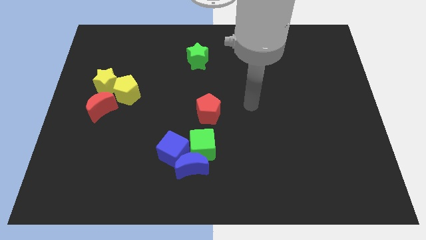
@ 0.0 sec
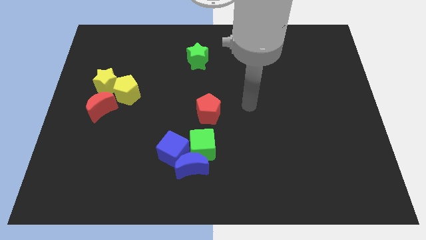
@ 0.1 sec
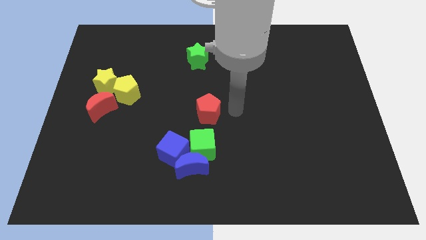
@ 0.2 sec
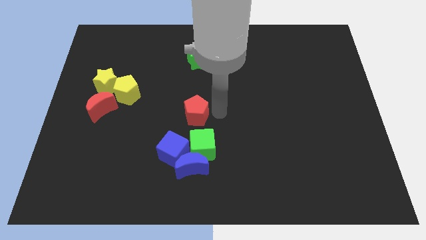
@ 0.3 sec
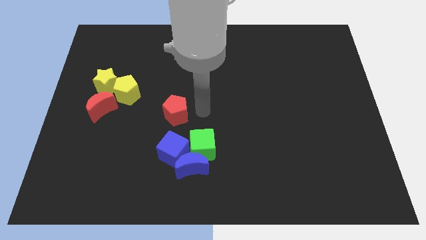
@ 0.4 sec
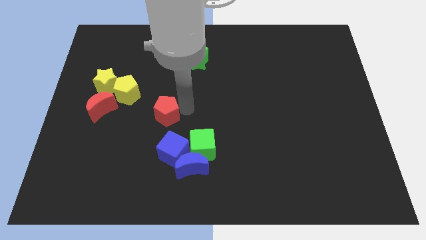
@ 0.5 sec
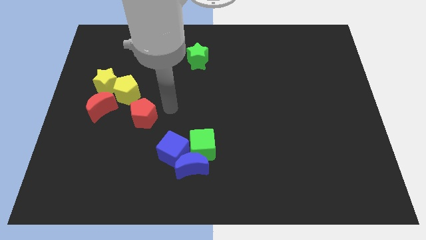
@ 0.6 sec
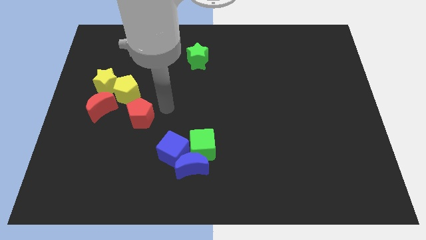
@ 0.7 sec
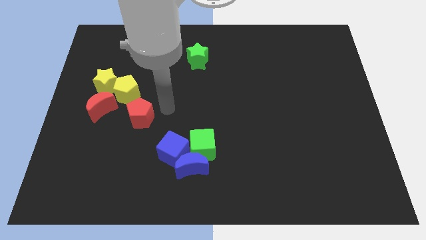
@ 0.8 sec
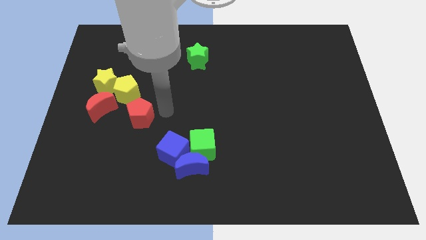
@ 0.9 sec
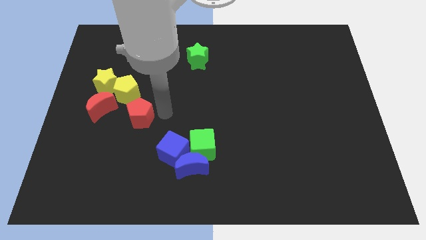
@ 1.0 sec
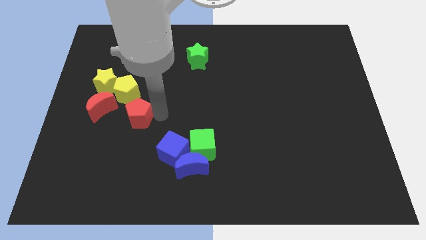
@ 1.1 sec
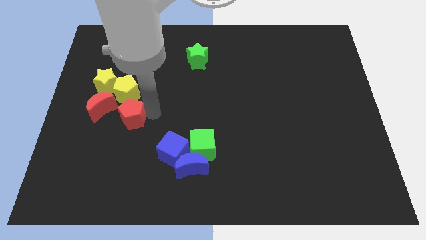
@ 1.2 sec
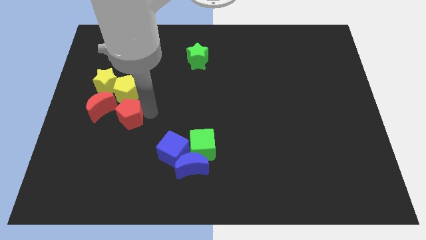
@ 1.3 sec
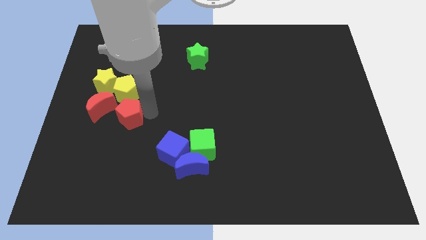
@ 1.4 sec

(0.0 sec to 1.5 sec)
place the red pentagon below to the yellow pentagon

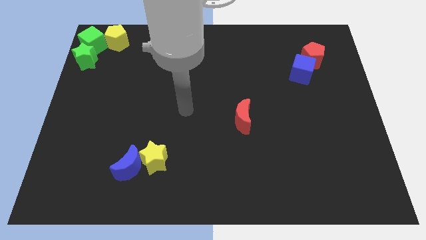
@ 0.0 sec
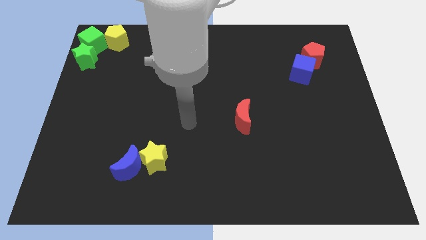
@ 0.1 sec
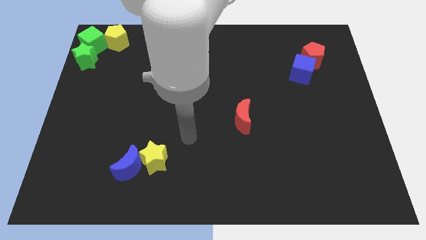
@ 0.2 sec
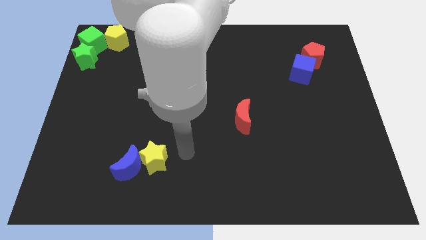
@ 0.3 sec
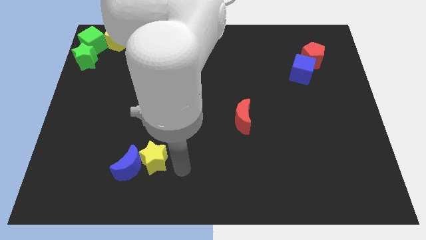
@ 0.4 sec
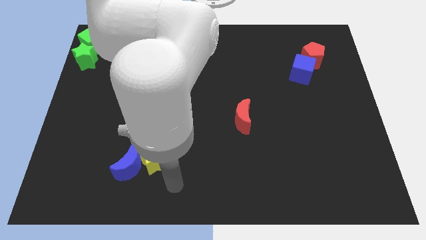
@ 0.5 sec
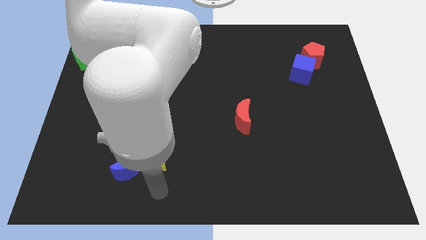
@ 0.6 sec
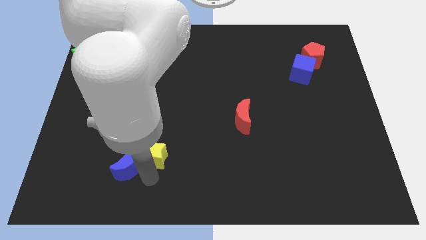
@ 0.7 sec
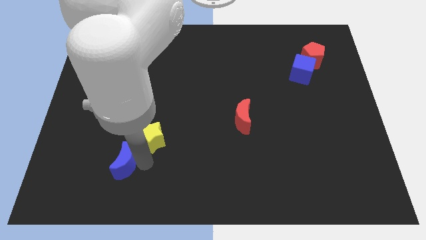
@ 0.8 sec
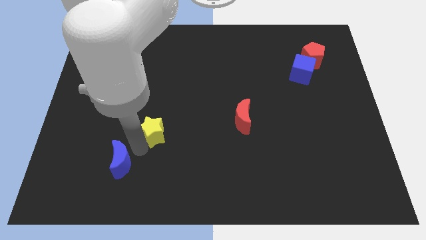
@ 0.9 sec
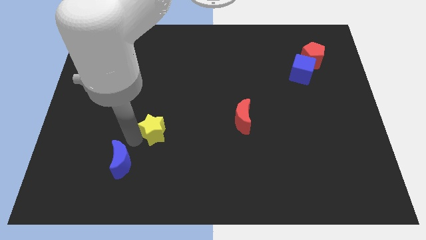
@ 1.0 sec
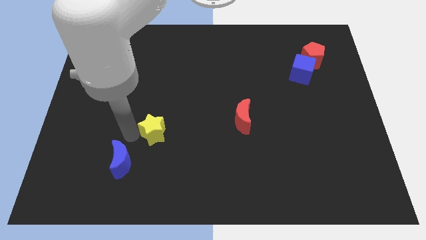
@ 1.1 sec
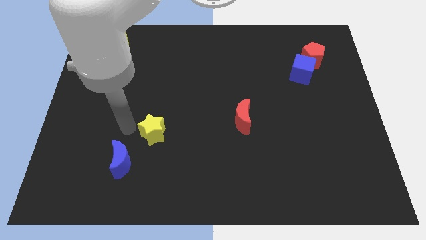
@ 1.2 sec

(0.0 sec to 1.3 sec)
separate the yellow star away from the blue crescent

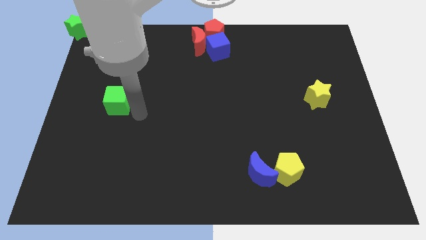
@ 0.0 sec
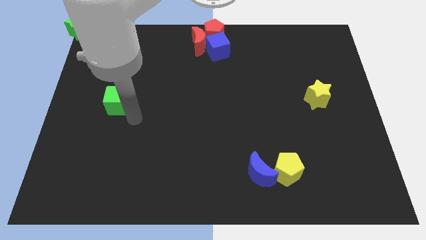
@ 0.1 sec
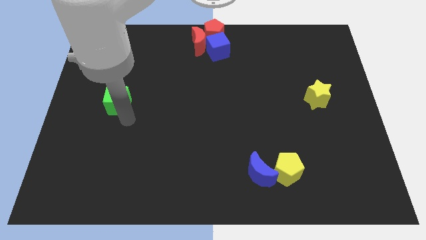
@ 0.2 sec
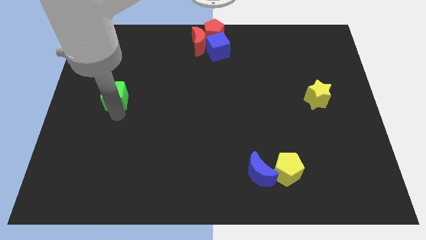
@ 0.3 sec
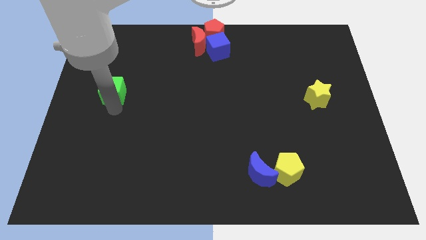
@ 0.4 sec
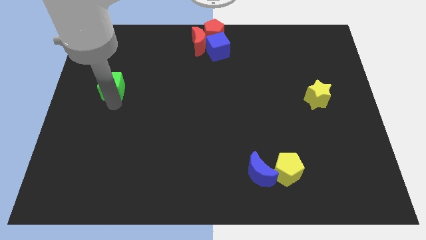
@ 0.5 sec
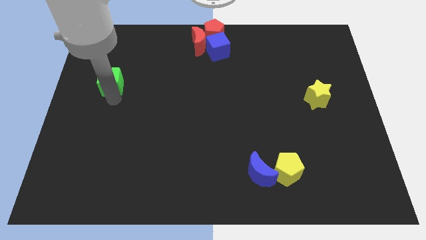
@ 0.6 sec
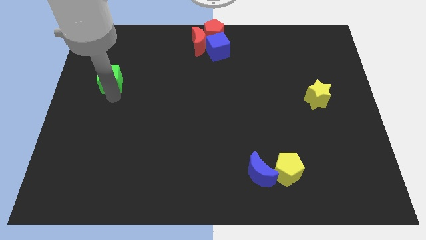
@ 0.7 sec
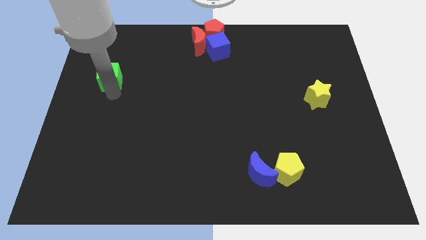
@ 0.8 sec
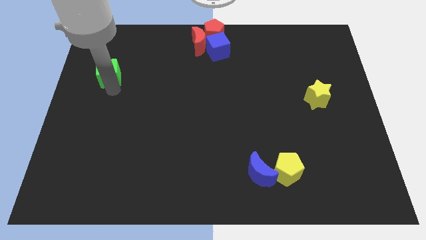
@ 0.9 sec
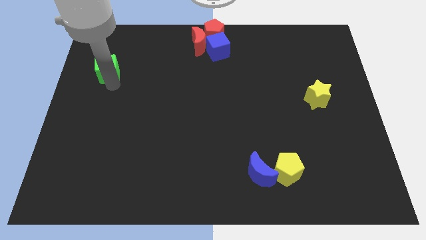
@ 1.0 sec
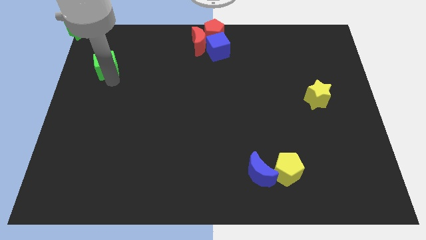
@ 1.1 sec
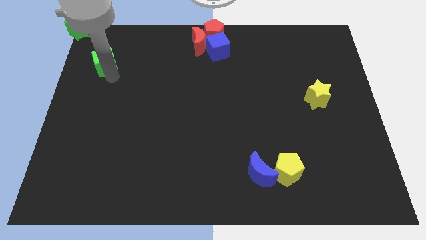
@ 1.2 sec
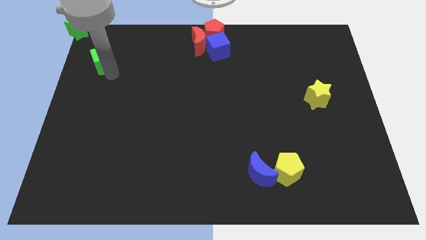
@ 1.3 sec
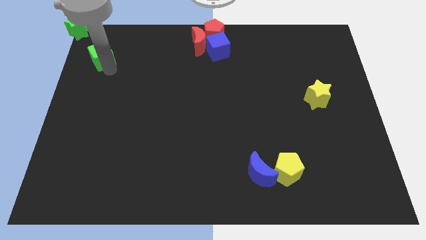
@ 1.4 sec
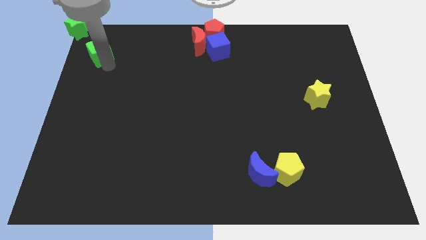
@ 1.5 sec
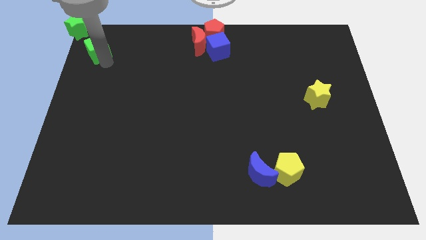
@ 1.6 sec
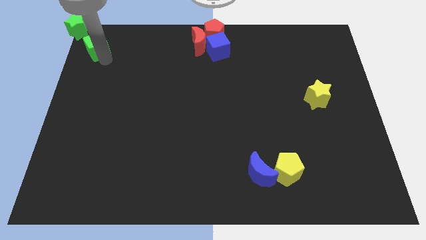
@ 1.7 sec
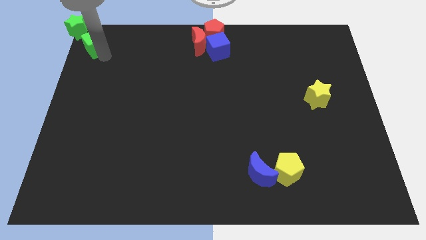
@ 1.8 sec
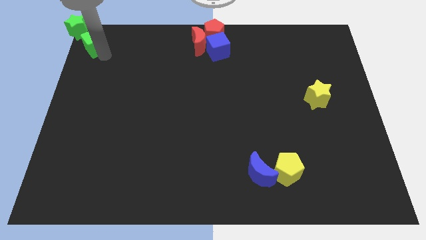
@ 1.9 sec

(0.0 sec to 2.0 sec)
move the green cube close to the green star

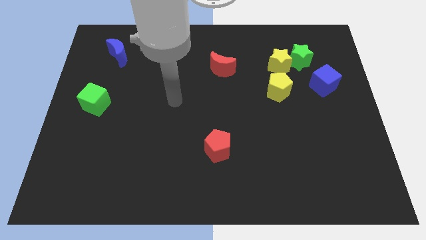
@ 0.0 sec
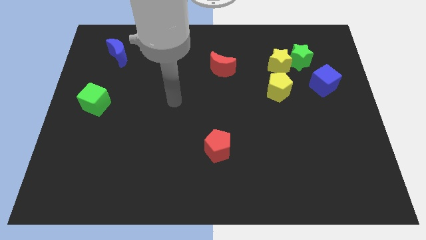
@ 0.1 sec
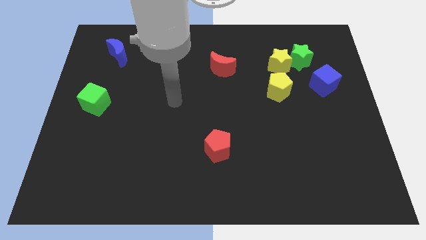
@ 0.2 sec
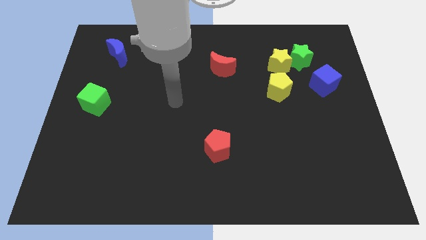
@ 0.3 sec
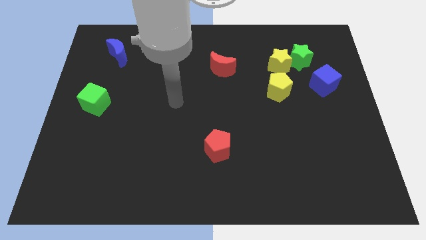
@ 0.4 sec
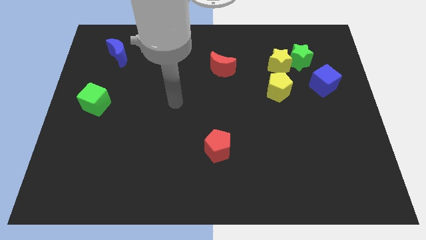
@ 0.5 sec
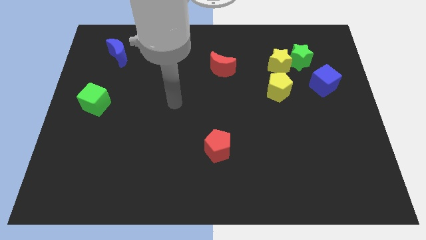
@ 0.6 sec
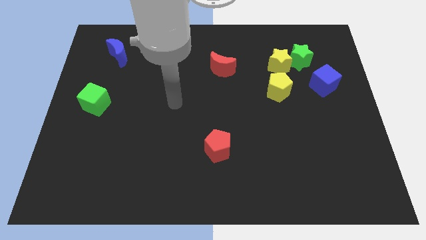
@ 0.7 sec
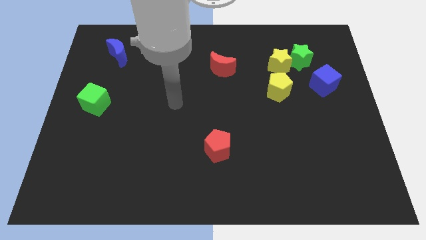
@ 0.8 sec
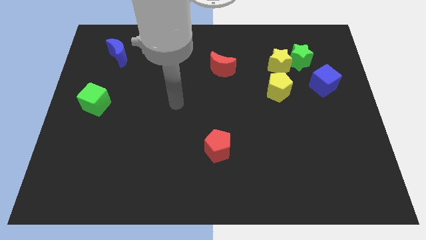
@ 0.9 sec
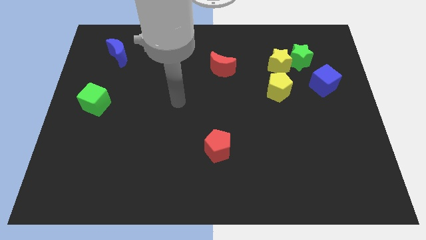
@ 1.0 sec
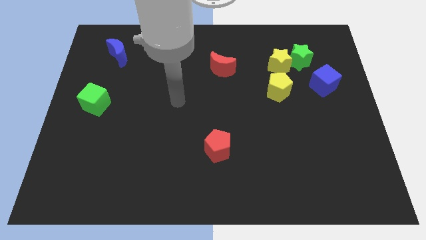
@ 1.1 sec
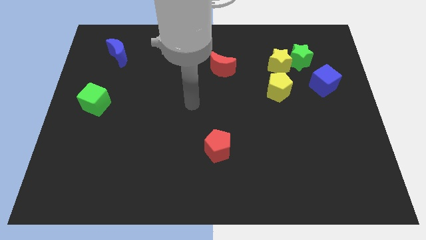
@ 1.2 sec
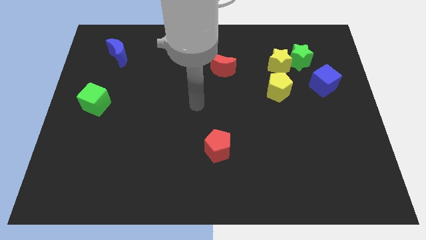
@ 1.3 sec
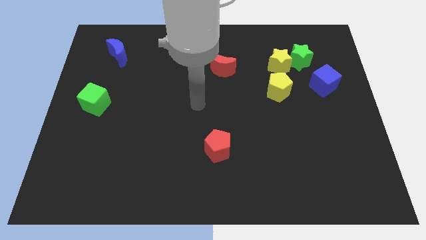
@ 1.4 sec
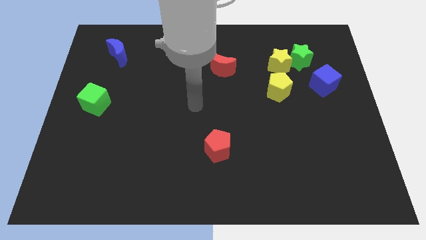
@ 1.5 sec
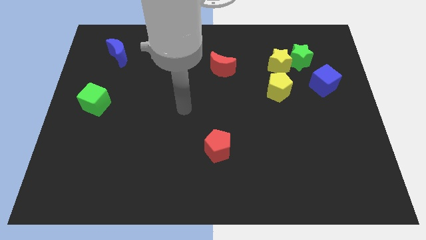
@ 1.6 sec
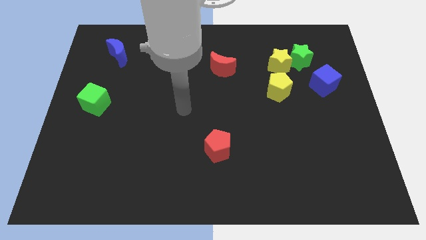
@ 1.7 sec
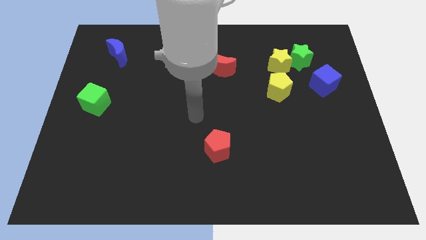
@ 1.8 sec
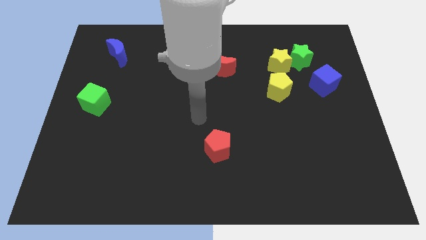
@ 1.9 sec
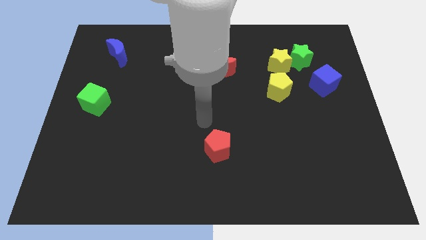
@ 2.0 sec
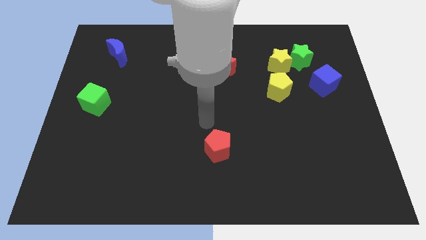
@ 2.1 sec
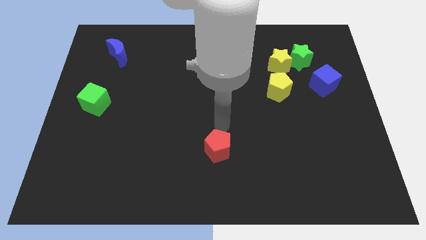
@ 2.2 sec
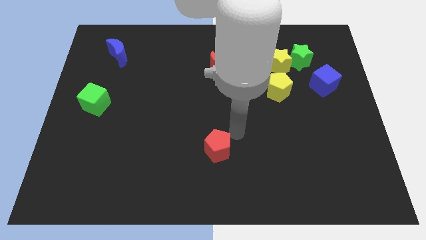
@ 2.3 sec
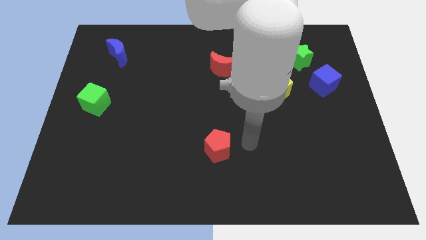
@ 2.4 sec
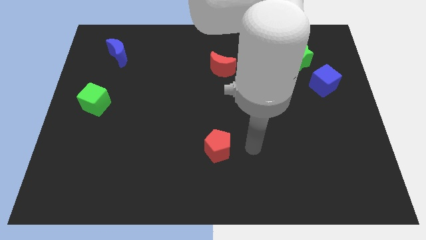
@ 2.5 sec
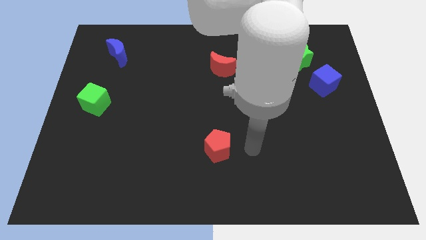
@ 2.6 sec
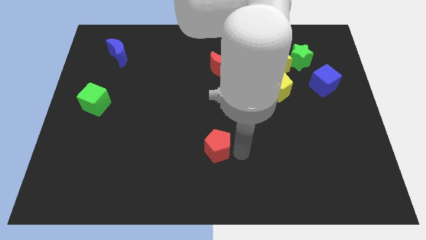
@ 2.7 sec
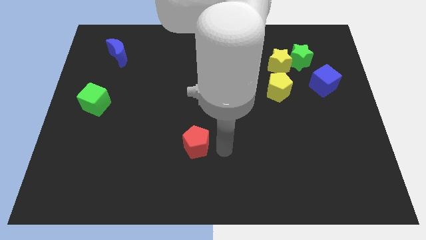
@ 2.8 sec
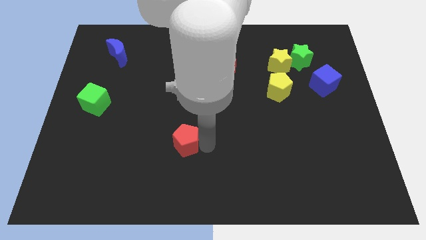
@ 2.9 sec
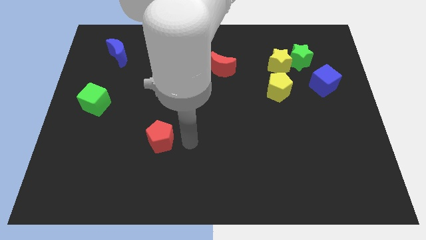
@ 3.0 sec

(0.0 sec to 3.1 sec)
move the red pentagon towards the green cube

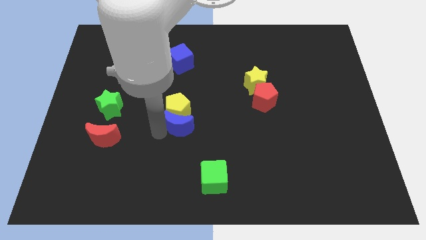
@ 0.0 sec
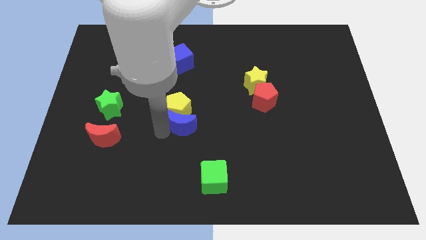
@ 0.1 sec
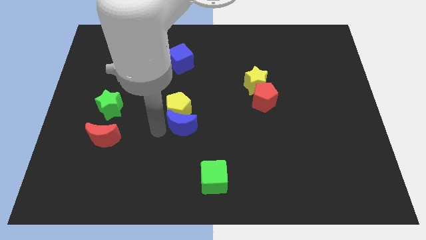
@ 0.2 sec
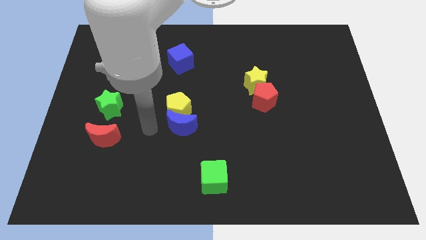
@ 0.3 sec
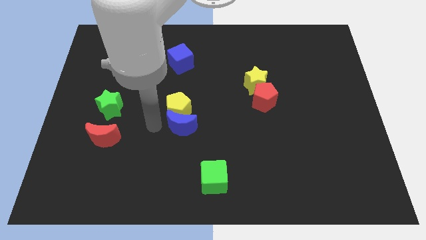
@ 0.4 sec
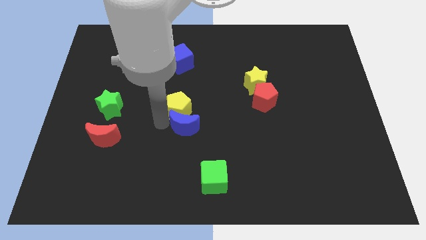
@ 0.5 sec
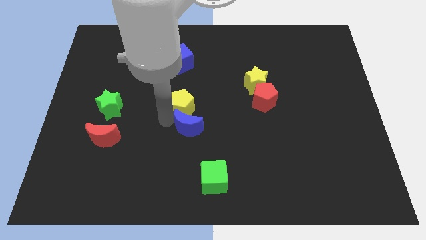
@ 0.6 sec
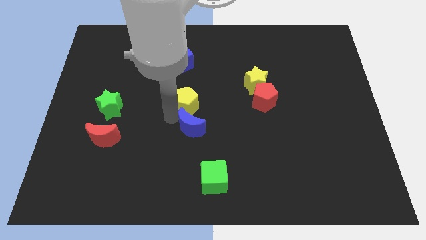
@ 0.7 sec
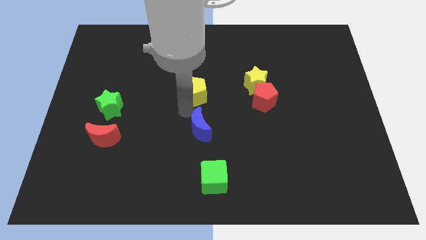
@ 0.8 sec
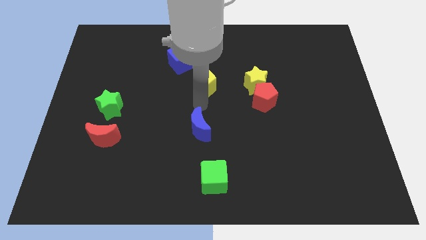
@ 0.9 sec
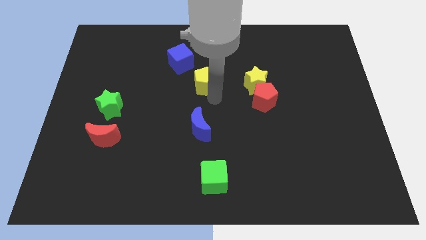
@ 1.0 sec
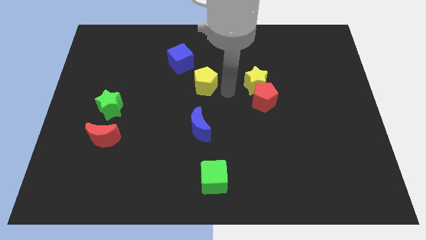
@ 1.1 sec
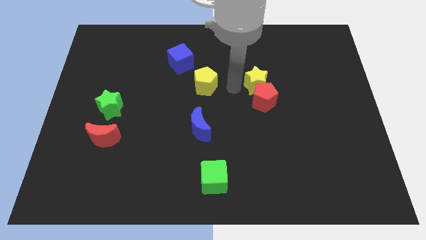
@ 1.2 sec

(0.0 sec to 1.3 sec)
separate the yellow pentagon and blue crescent
